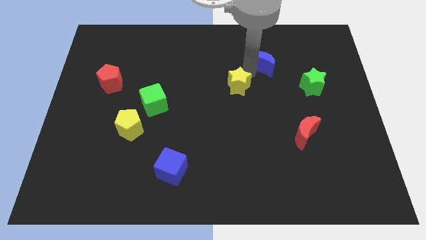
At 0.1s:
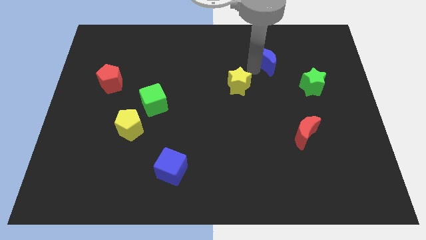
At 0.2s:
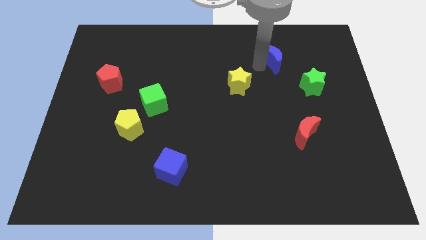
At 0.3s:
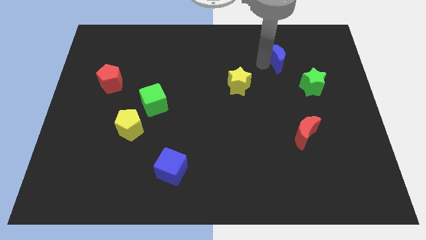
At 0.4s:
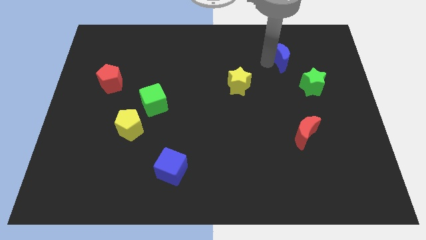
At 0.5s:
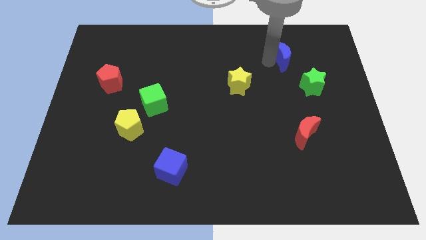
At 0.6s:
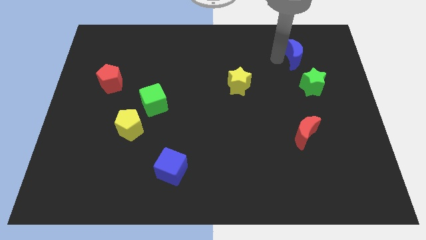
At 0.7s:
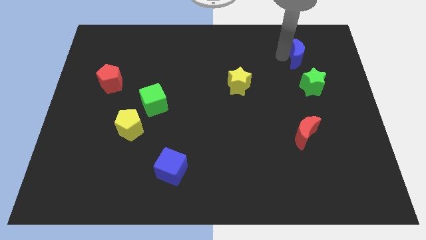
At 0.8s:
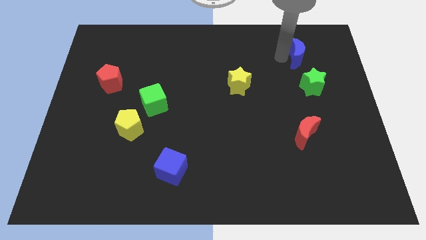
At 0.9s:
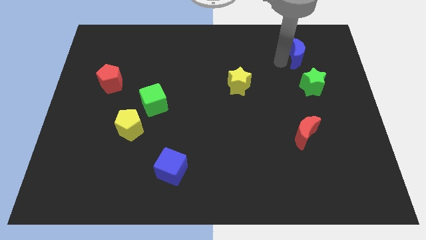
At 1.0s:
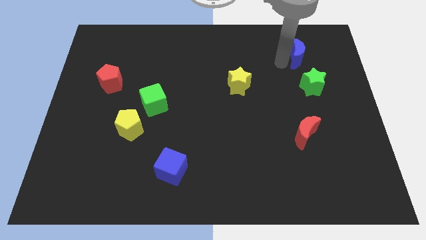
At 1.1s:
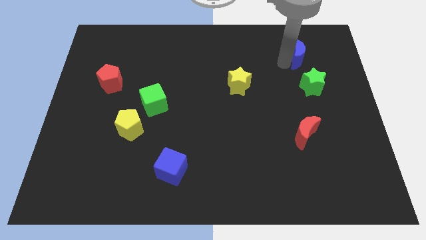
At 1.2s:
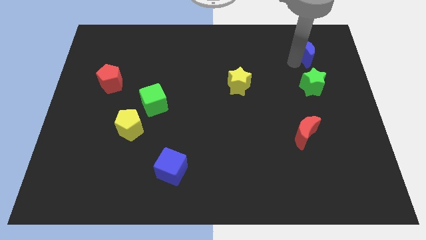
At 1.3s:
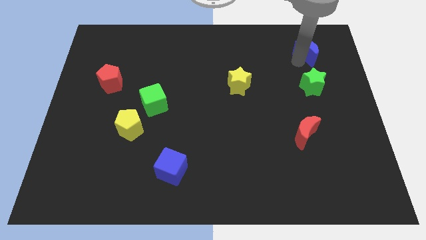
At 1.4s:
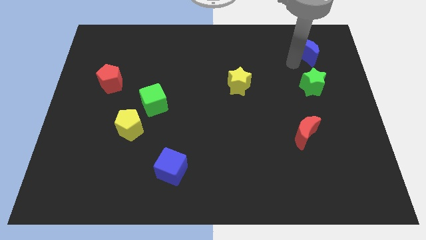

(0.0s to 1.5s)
place blue crescent above green star

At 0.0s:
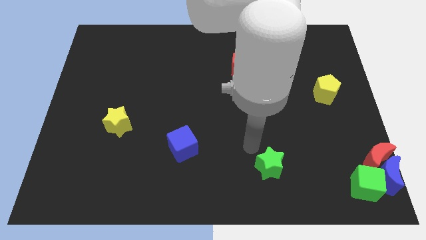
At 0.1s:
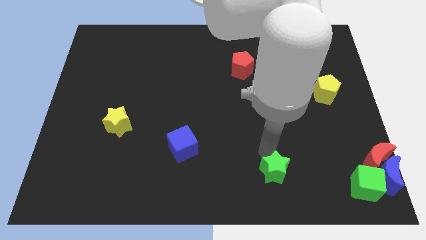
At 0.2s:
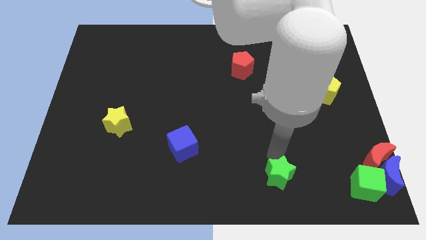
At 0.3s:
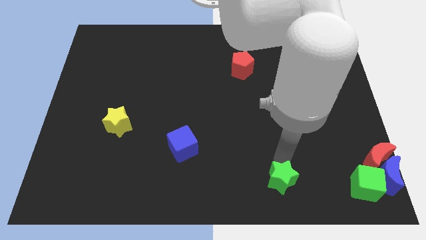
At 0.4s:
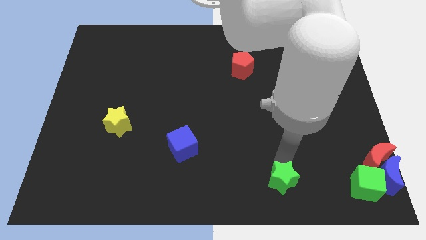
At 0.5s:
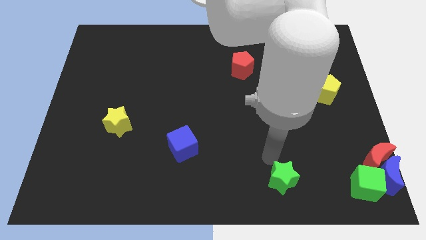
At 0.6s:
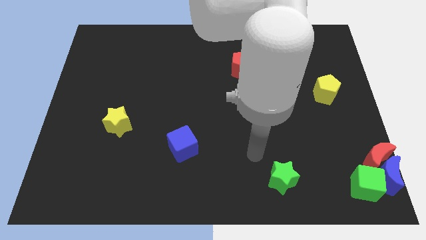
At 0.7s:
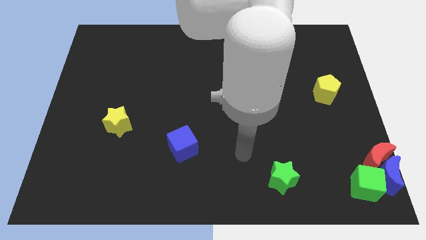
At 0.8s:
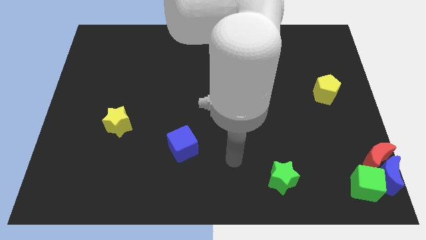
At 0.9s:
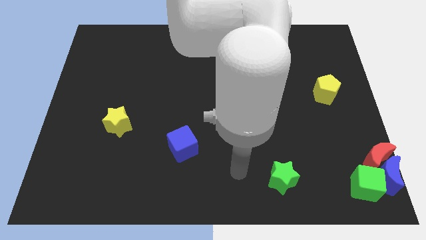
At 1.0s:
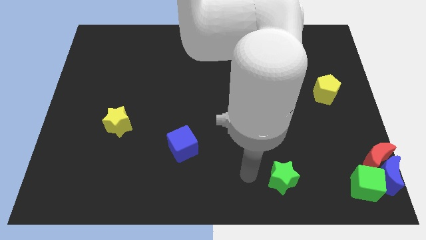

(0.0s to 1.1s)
place the green star to the left of the green cube

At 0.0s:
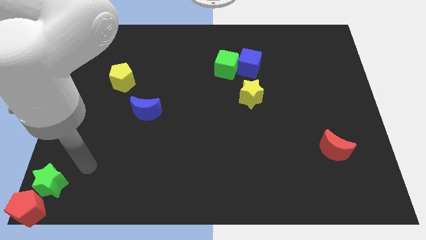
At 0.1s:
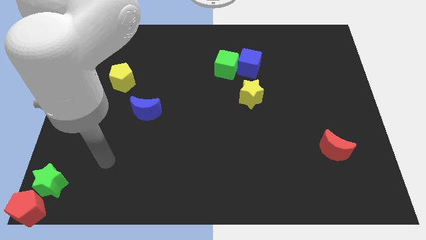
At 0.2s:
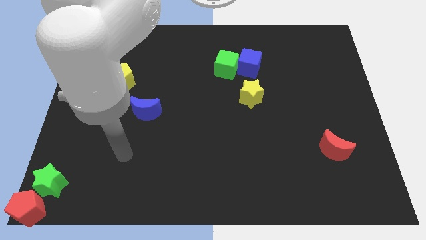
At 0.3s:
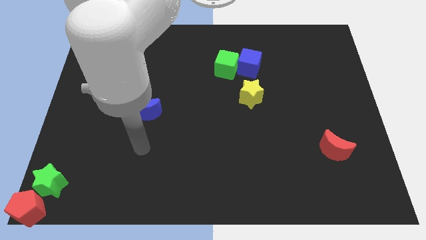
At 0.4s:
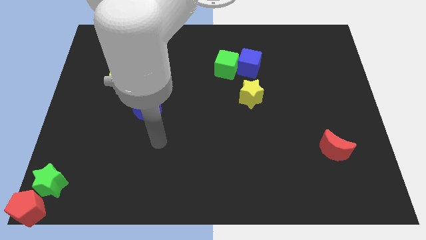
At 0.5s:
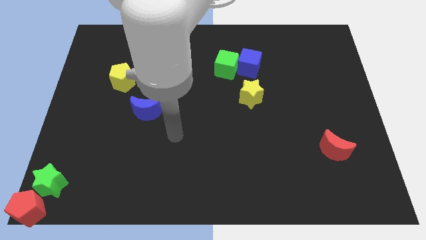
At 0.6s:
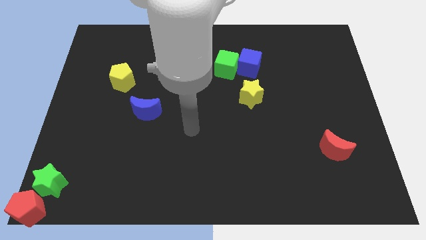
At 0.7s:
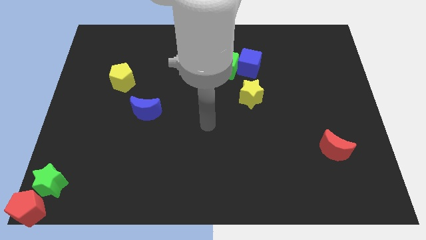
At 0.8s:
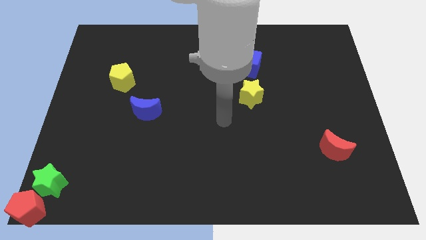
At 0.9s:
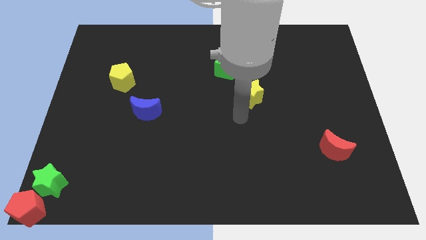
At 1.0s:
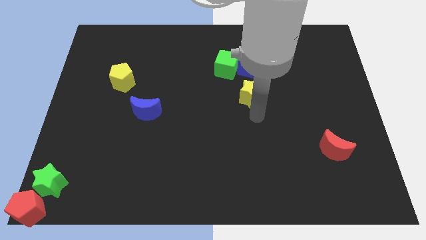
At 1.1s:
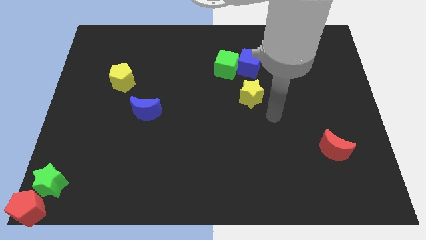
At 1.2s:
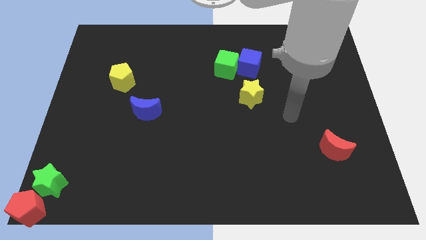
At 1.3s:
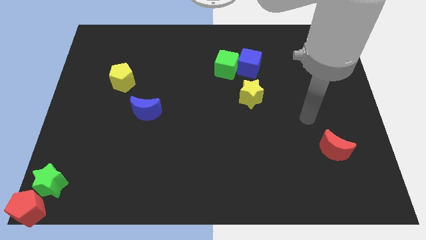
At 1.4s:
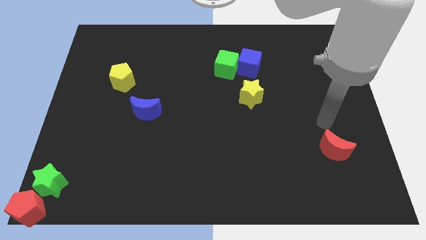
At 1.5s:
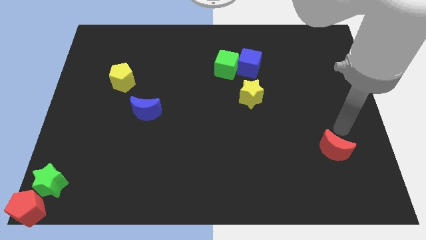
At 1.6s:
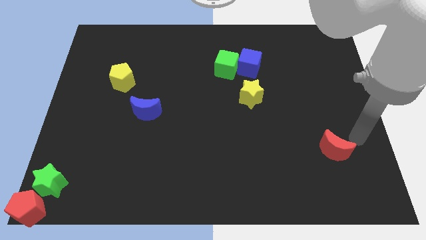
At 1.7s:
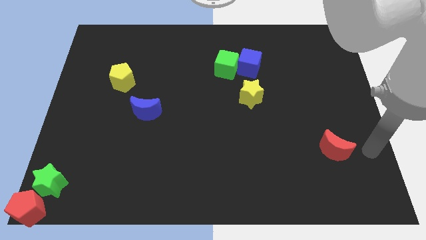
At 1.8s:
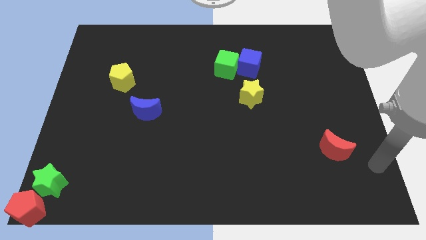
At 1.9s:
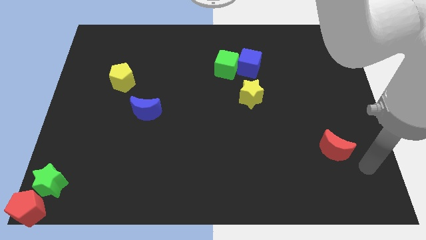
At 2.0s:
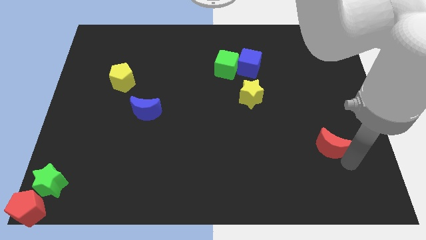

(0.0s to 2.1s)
tap the right side of the red crescent

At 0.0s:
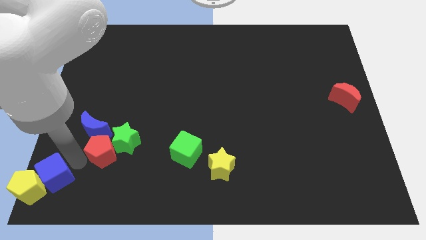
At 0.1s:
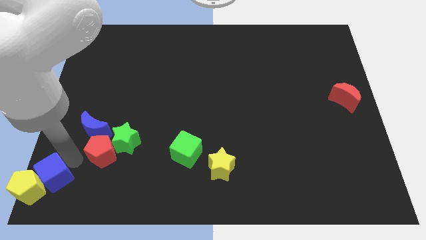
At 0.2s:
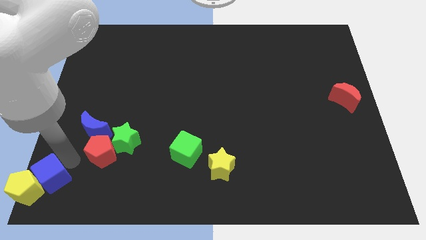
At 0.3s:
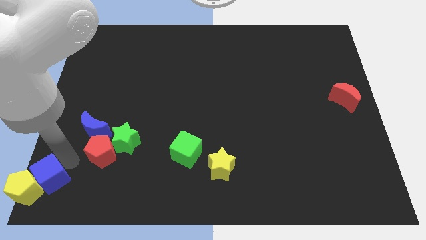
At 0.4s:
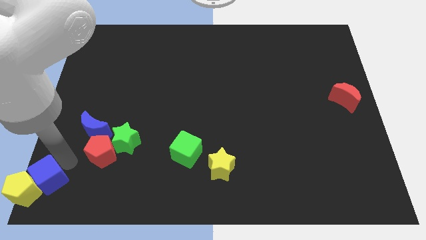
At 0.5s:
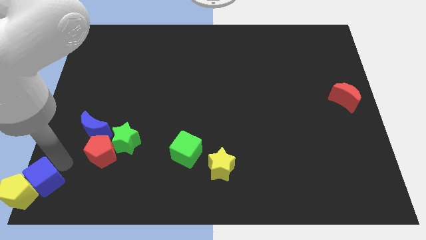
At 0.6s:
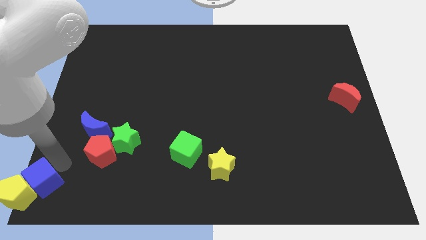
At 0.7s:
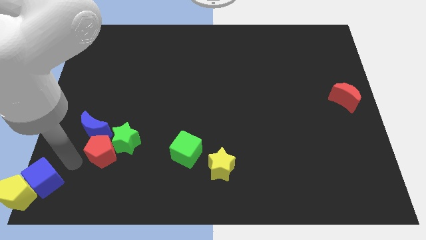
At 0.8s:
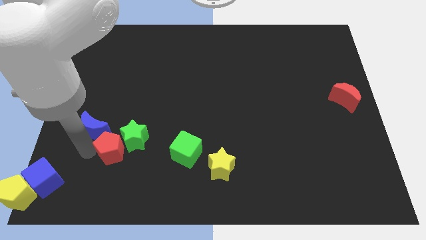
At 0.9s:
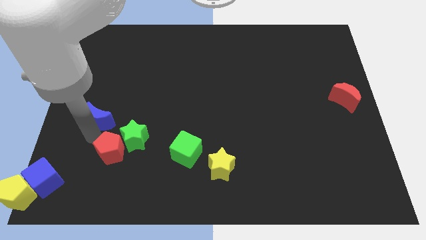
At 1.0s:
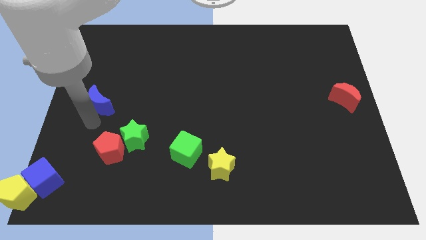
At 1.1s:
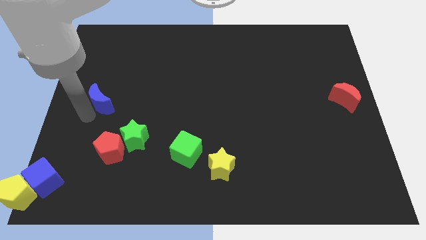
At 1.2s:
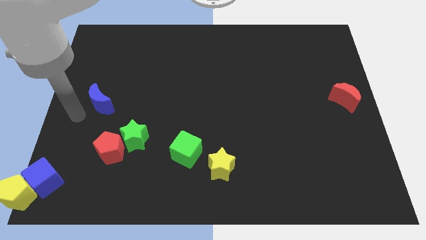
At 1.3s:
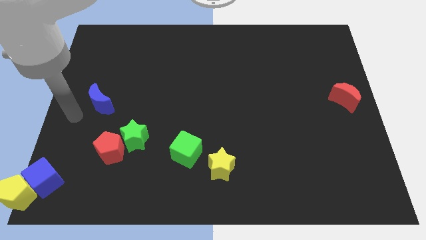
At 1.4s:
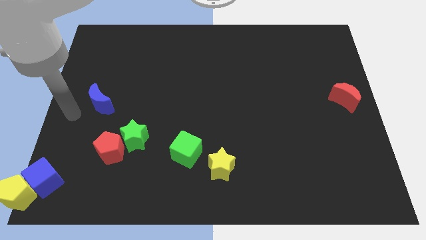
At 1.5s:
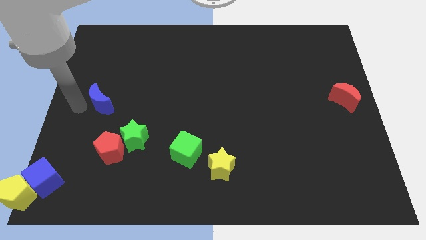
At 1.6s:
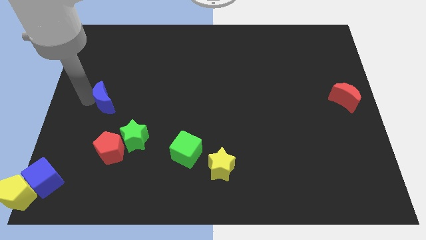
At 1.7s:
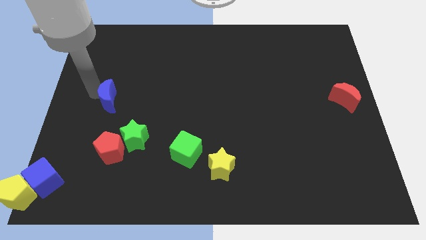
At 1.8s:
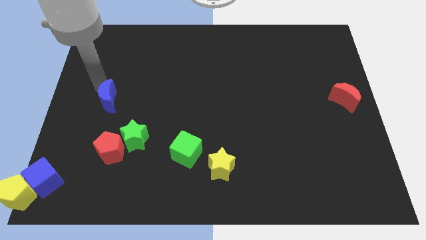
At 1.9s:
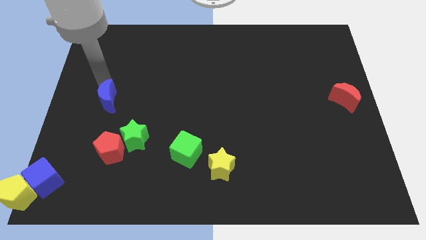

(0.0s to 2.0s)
place the blue moon above the red pentagon

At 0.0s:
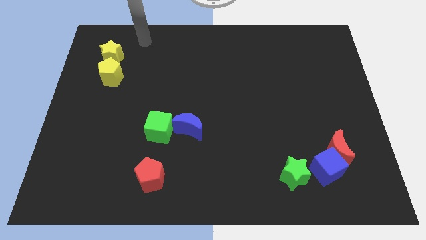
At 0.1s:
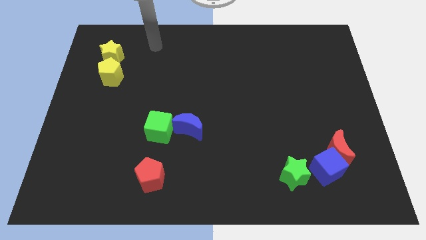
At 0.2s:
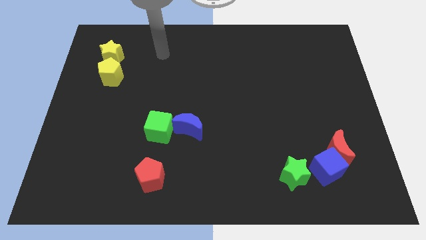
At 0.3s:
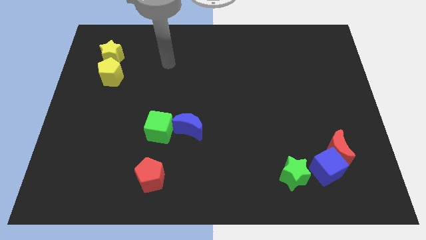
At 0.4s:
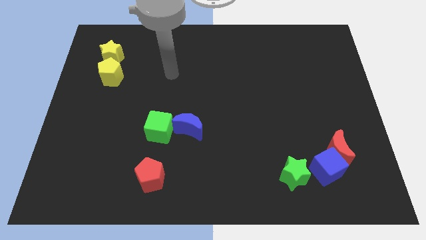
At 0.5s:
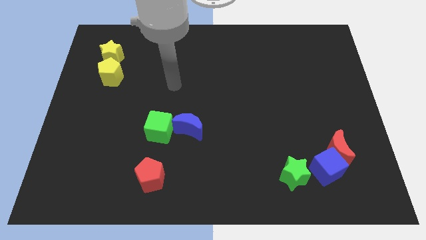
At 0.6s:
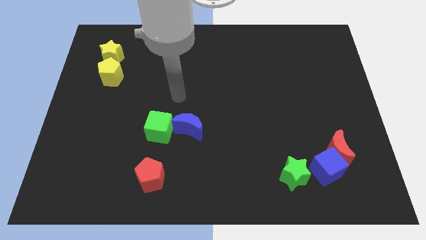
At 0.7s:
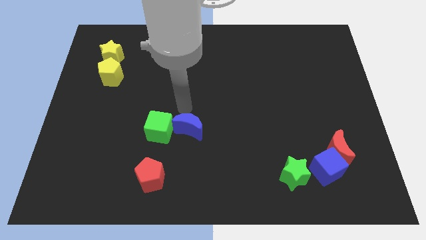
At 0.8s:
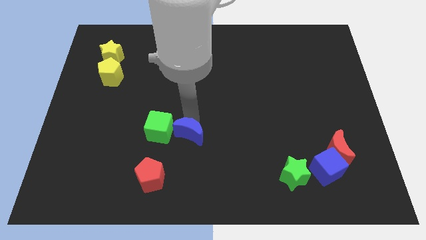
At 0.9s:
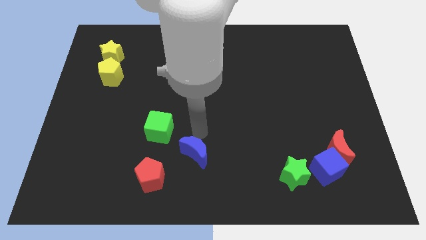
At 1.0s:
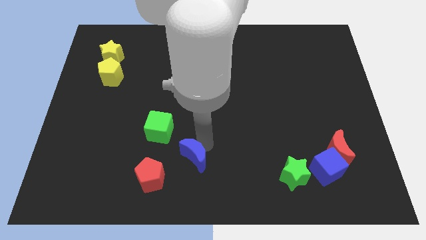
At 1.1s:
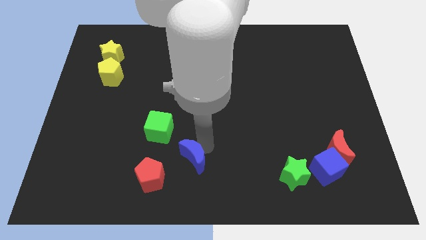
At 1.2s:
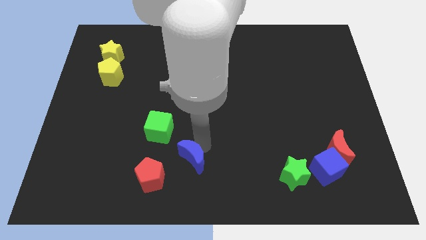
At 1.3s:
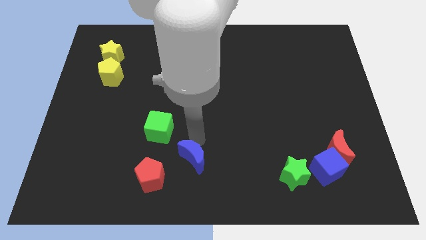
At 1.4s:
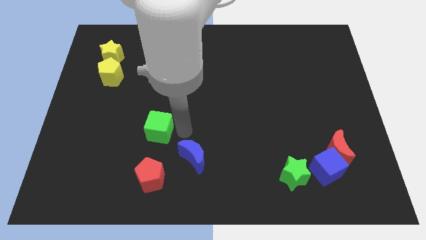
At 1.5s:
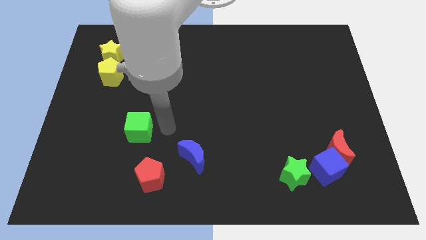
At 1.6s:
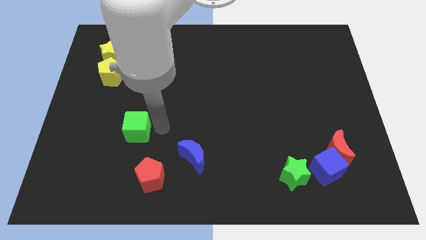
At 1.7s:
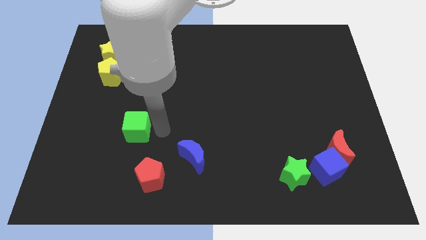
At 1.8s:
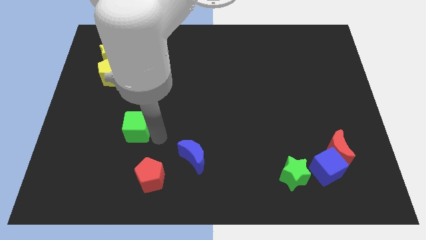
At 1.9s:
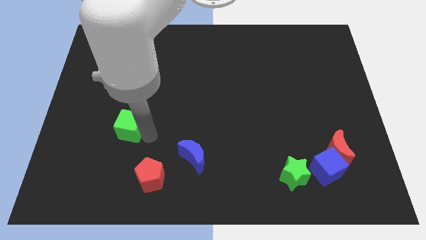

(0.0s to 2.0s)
separate the blue crescent and the green cube

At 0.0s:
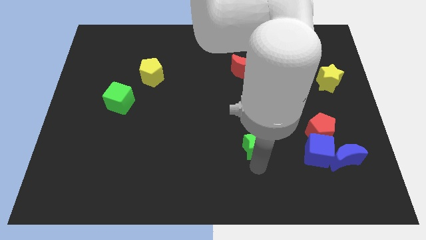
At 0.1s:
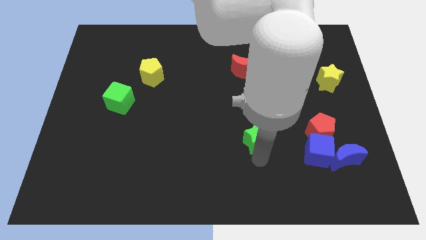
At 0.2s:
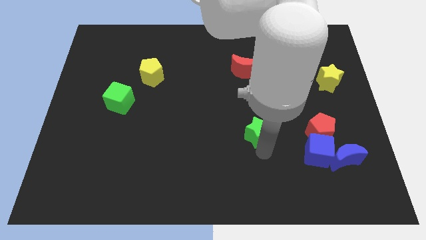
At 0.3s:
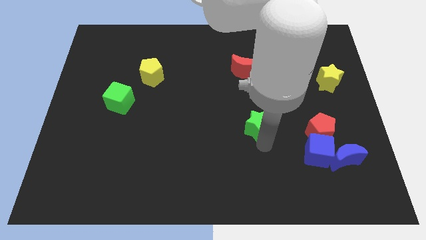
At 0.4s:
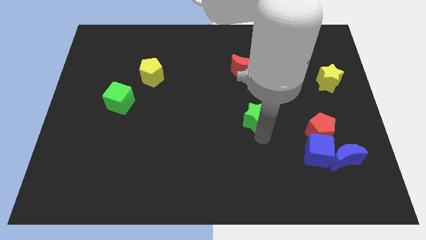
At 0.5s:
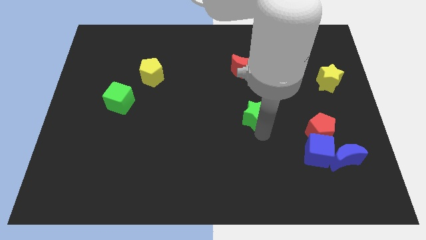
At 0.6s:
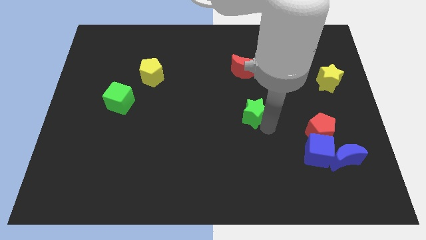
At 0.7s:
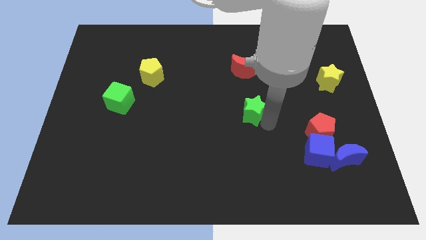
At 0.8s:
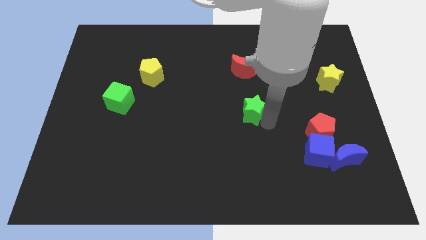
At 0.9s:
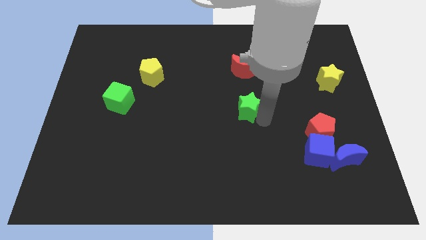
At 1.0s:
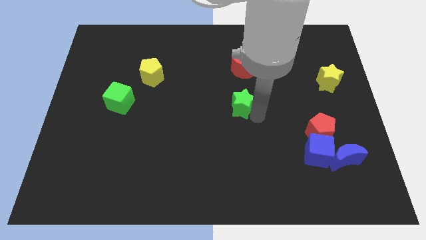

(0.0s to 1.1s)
place the green star below the red moon
